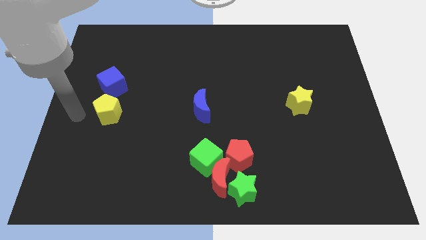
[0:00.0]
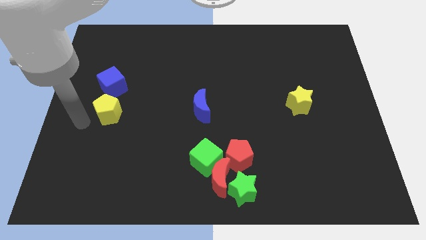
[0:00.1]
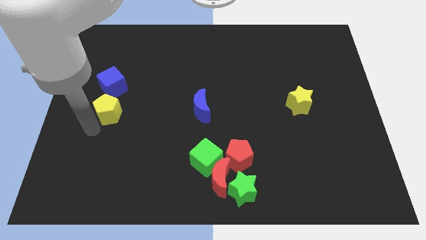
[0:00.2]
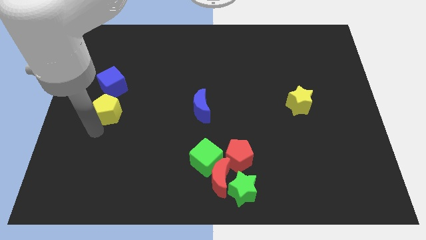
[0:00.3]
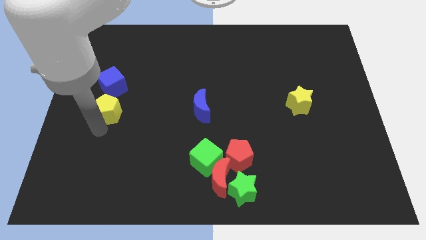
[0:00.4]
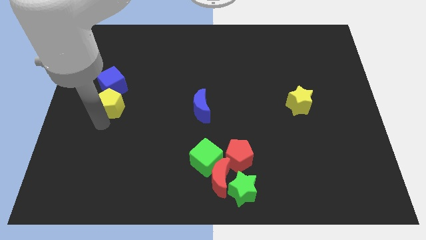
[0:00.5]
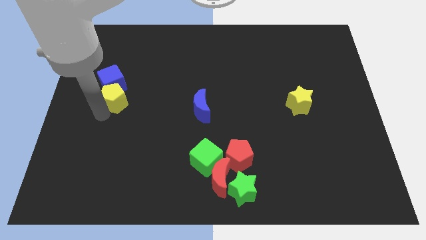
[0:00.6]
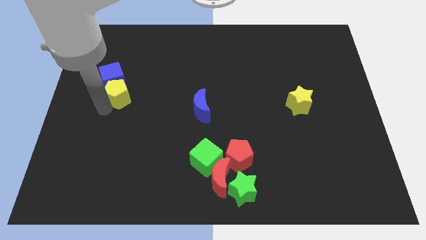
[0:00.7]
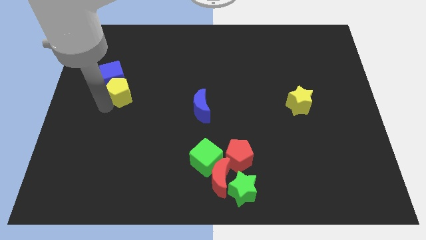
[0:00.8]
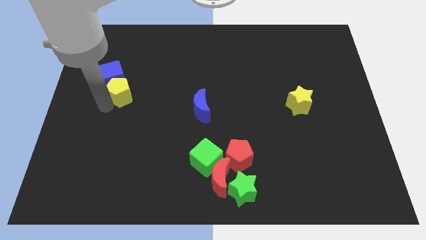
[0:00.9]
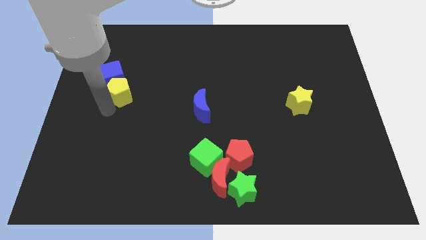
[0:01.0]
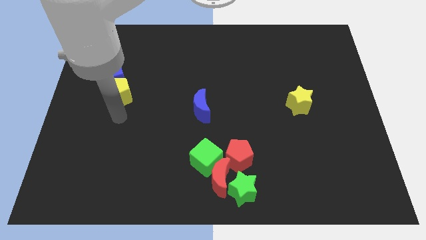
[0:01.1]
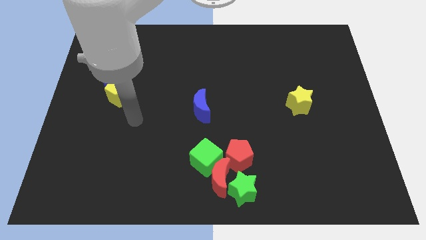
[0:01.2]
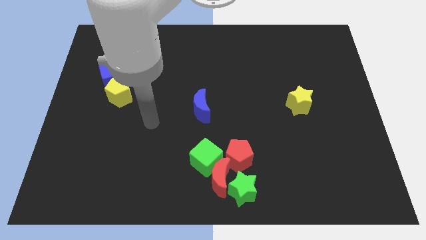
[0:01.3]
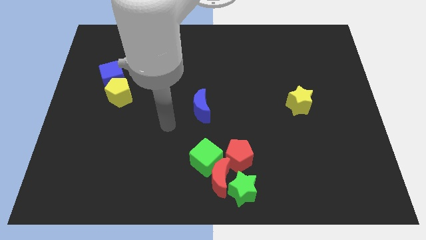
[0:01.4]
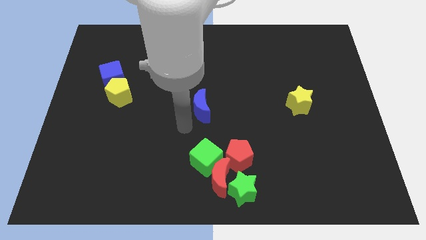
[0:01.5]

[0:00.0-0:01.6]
move the yellow pentagon and blue cube slightly upwards

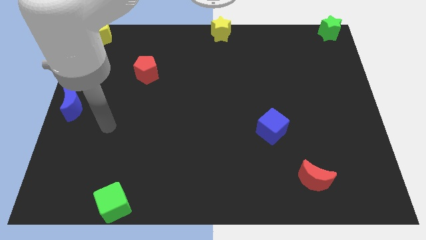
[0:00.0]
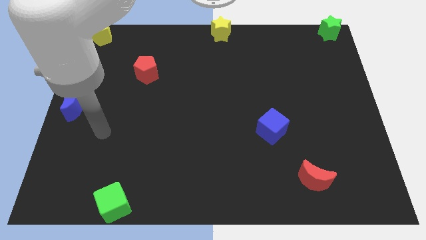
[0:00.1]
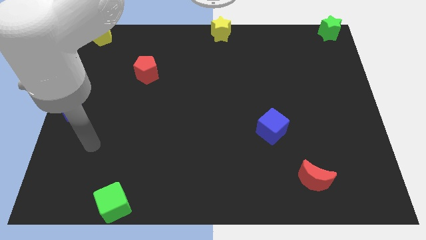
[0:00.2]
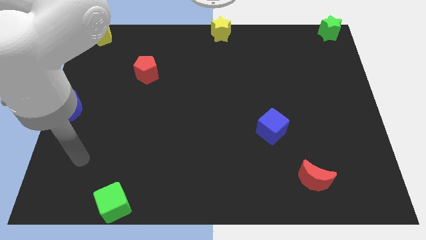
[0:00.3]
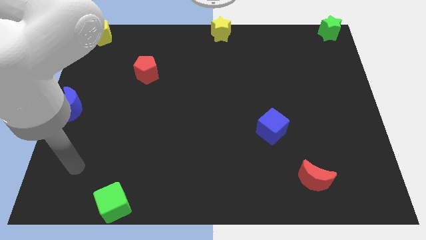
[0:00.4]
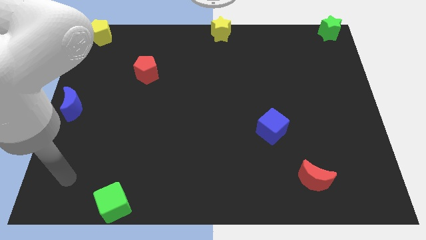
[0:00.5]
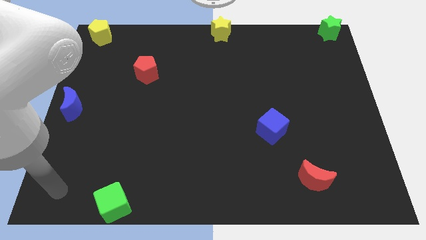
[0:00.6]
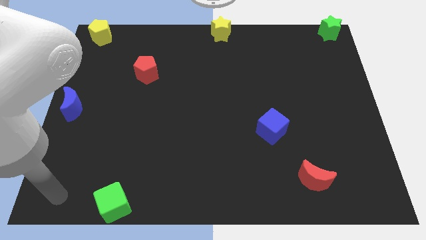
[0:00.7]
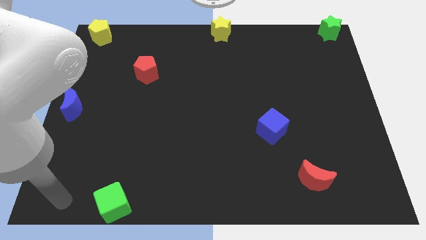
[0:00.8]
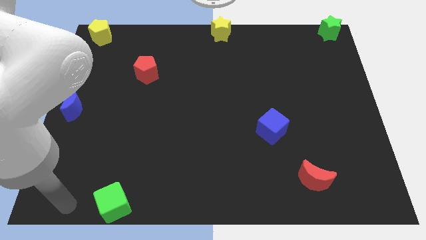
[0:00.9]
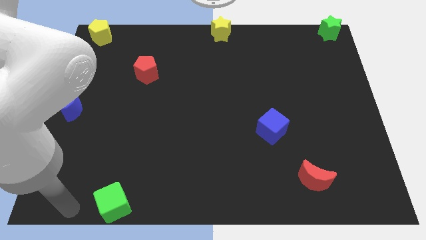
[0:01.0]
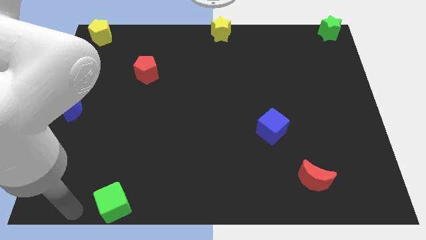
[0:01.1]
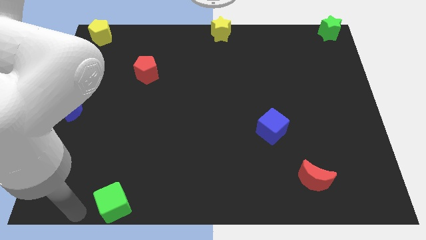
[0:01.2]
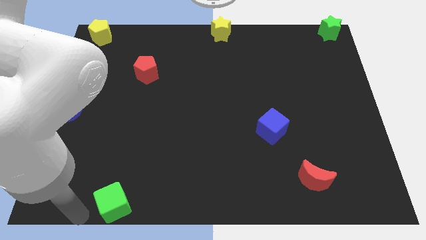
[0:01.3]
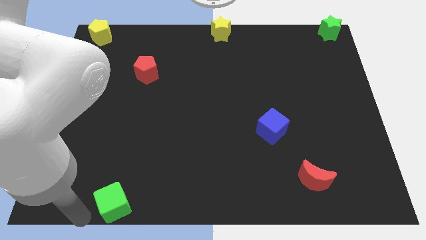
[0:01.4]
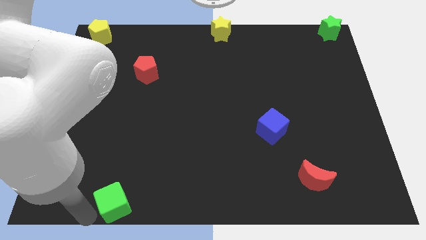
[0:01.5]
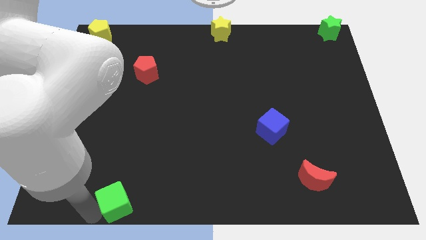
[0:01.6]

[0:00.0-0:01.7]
move the arm to the left of the green cube

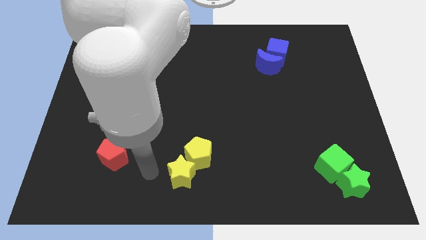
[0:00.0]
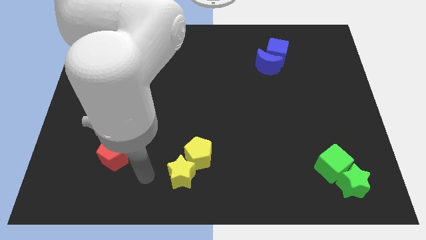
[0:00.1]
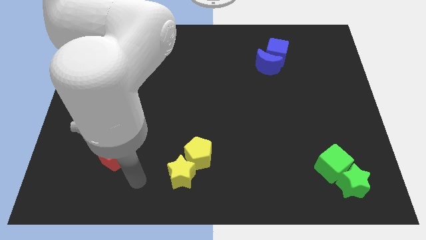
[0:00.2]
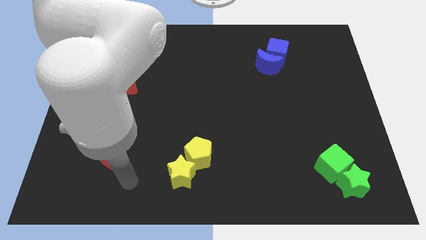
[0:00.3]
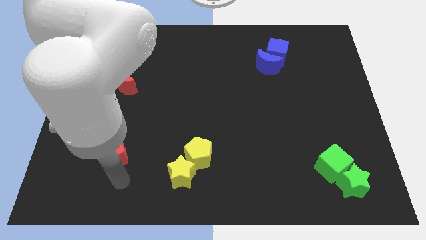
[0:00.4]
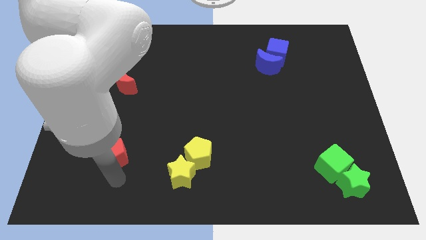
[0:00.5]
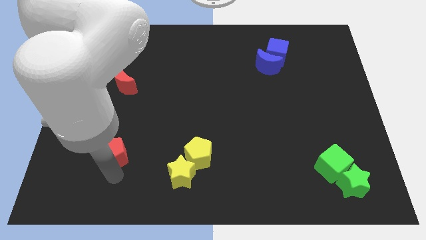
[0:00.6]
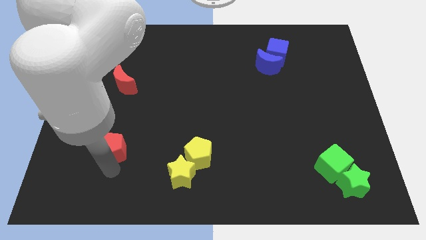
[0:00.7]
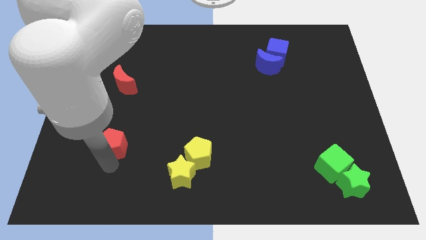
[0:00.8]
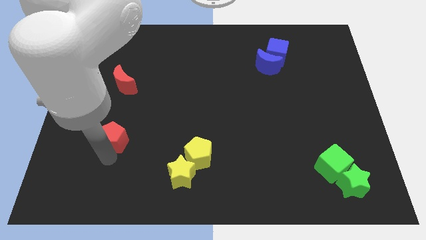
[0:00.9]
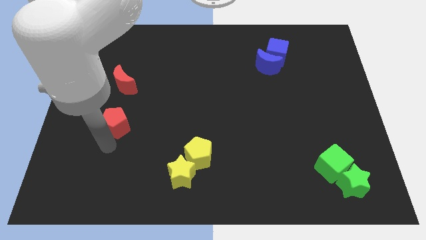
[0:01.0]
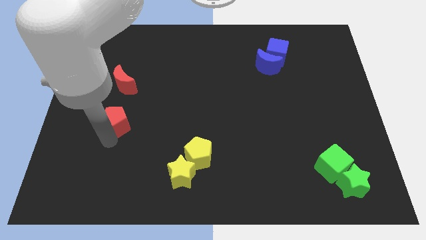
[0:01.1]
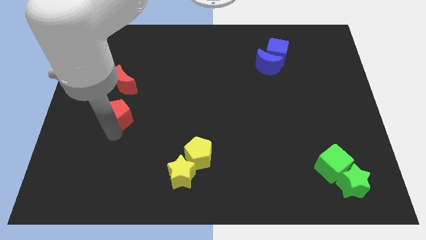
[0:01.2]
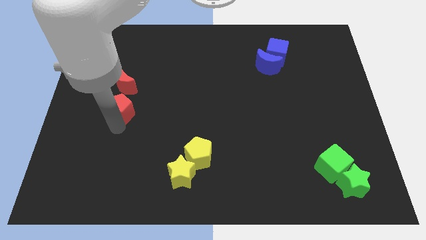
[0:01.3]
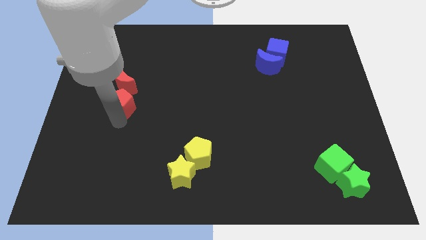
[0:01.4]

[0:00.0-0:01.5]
place the red pentagon below the red moon

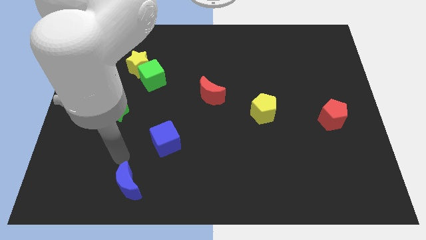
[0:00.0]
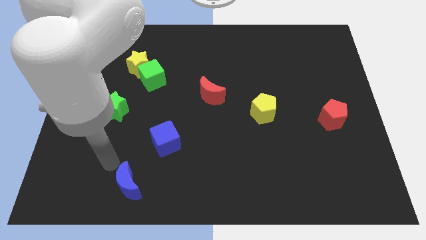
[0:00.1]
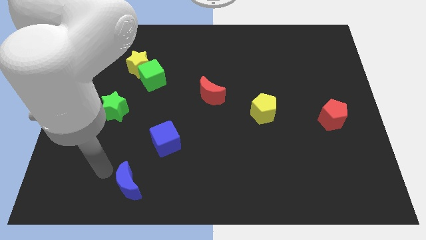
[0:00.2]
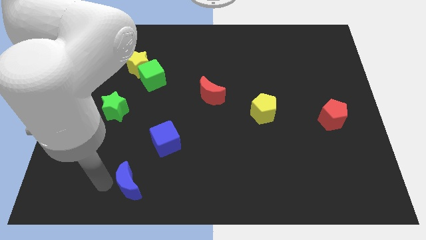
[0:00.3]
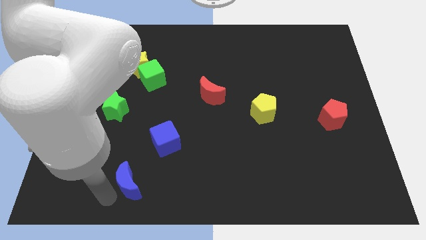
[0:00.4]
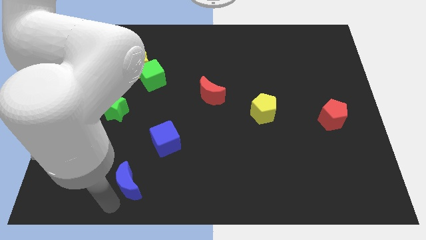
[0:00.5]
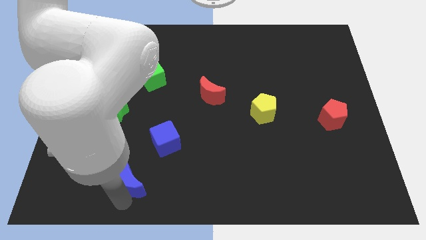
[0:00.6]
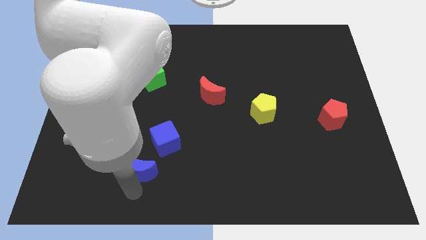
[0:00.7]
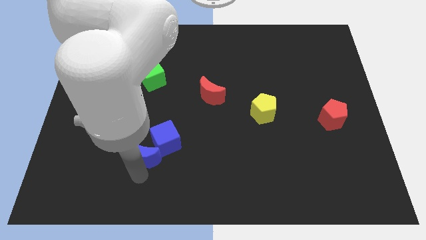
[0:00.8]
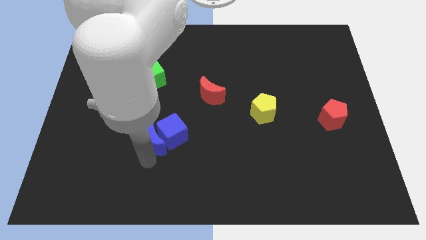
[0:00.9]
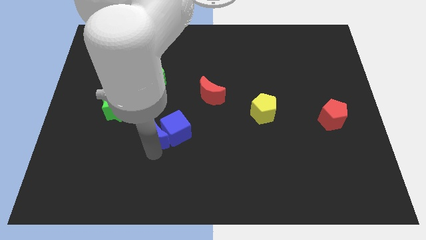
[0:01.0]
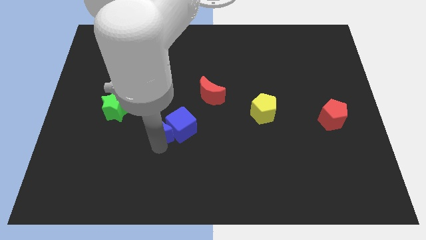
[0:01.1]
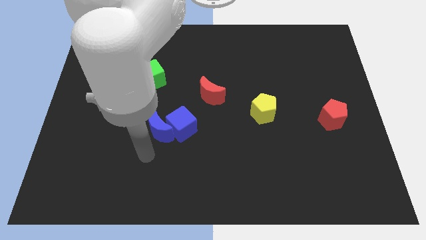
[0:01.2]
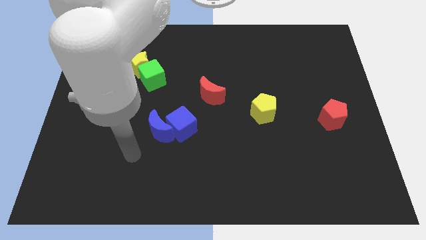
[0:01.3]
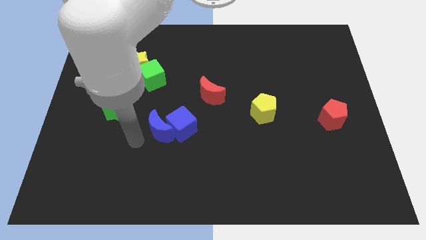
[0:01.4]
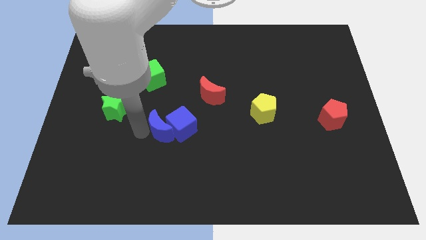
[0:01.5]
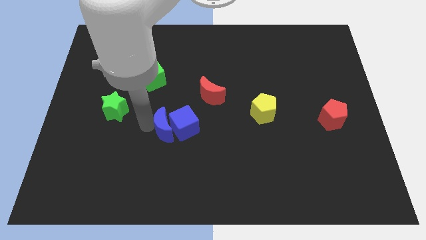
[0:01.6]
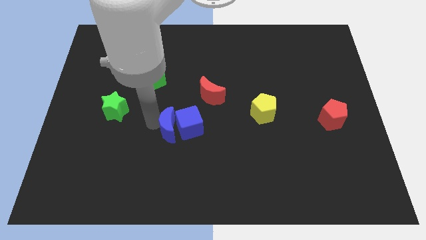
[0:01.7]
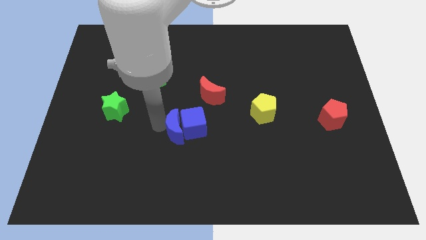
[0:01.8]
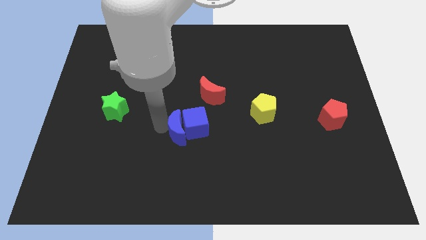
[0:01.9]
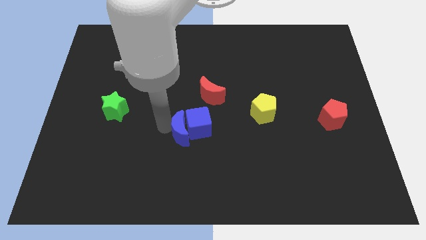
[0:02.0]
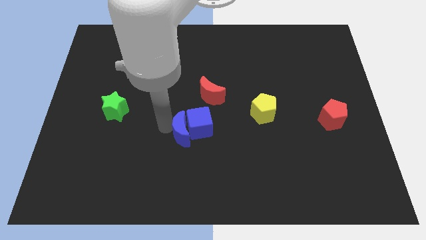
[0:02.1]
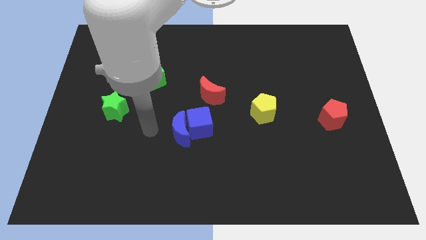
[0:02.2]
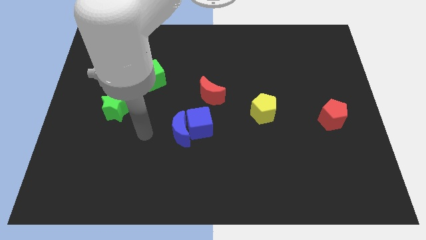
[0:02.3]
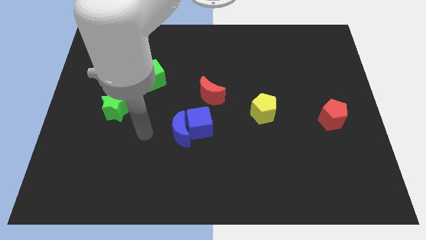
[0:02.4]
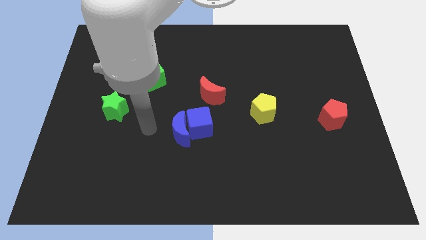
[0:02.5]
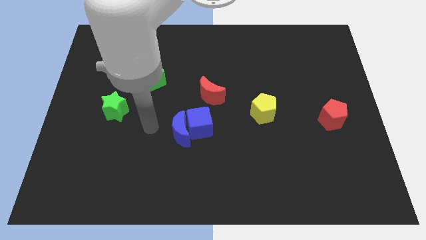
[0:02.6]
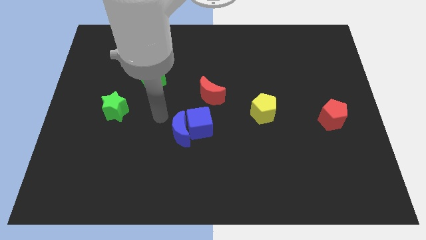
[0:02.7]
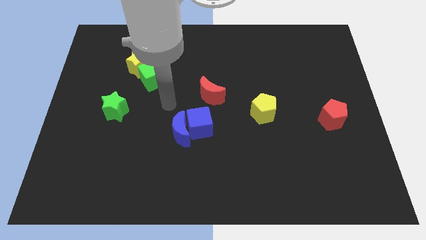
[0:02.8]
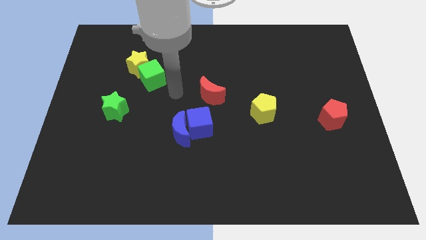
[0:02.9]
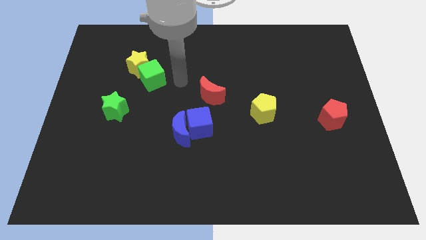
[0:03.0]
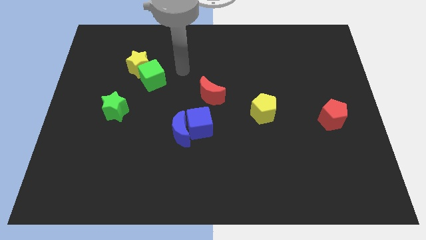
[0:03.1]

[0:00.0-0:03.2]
move the two blue blocks towards the center of the board

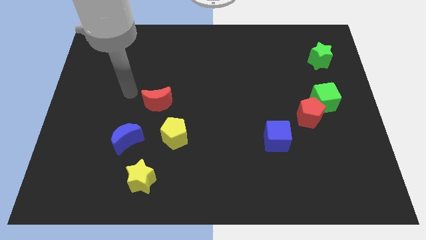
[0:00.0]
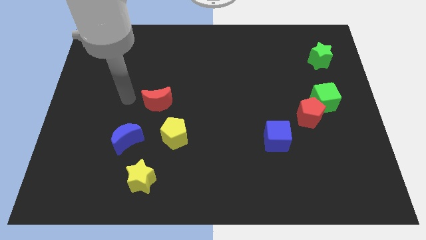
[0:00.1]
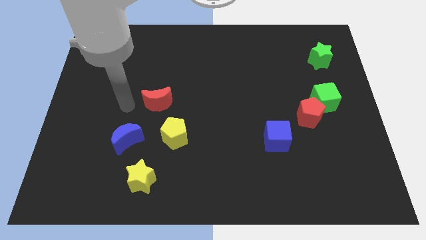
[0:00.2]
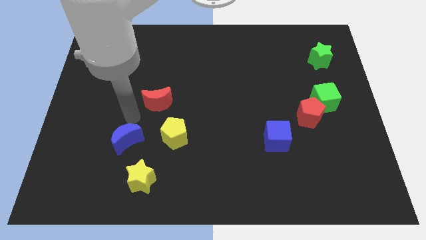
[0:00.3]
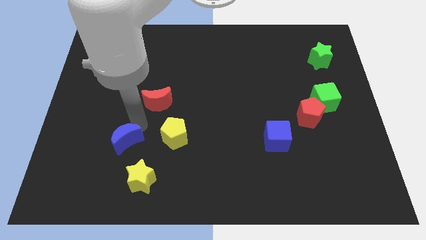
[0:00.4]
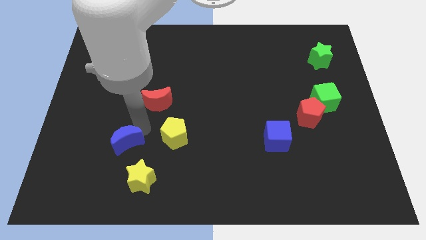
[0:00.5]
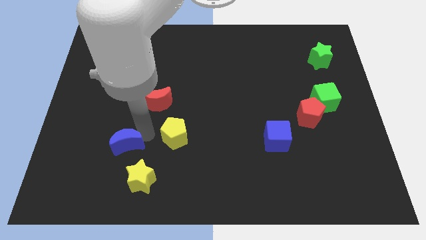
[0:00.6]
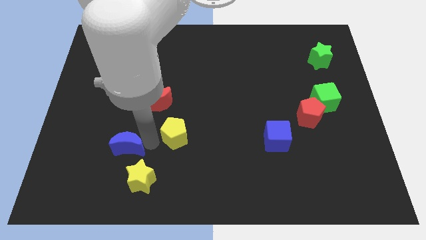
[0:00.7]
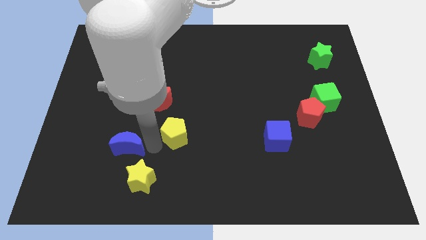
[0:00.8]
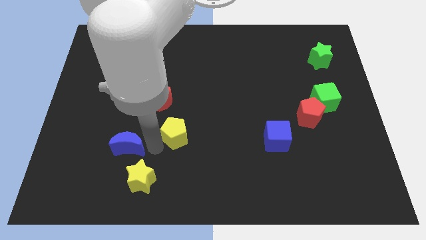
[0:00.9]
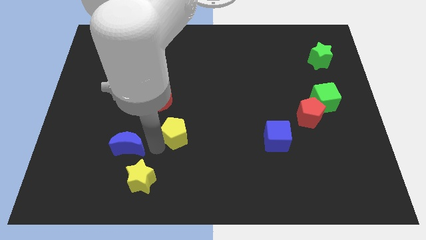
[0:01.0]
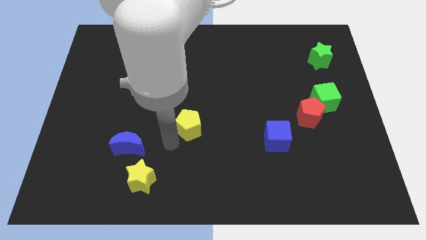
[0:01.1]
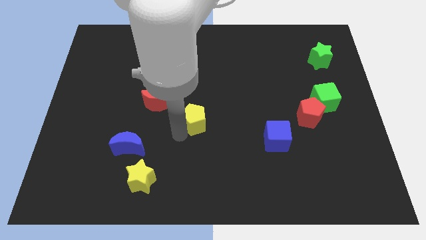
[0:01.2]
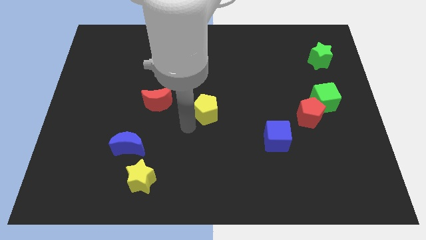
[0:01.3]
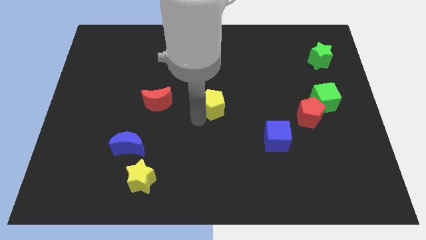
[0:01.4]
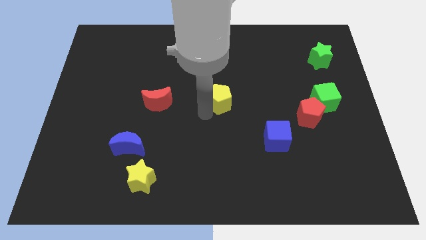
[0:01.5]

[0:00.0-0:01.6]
move the yellow pentagon to the center of the board
